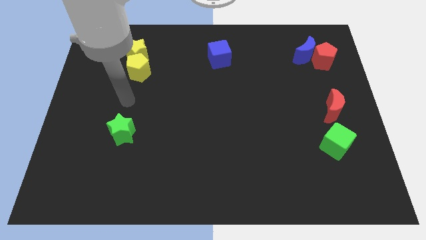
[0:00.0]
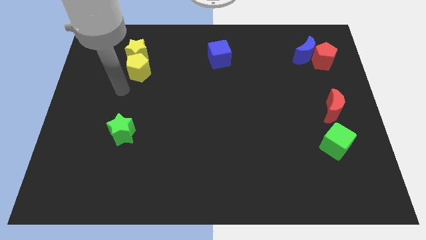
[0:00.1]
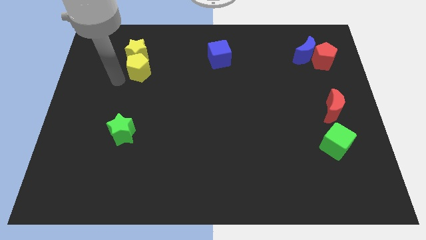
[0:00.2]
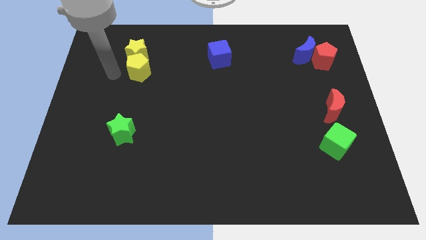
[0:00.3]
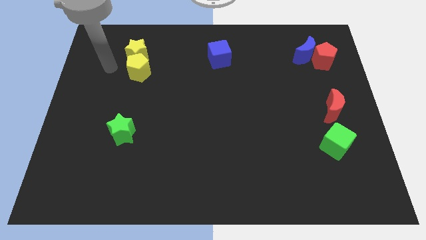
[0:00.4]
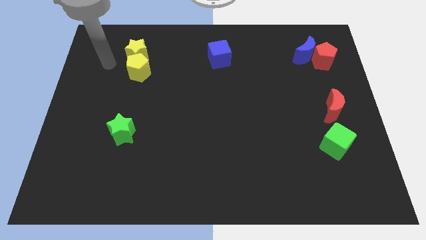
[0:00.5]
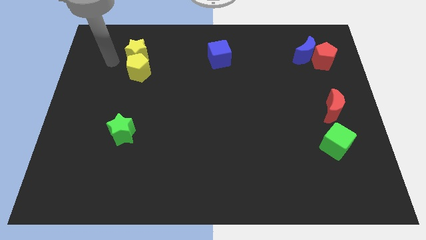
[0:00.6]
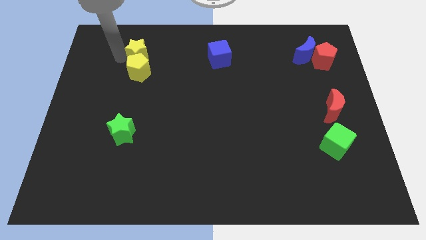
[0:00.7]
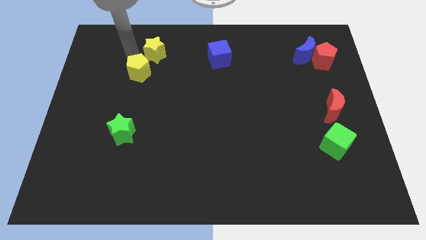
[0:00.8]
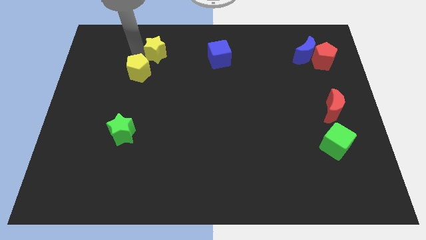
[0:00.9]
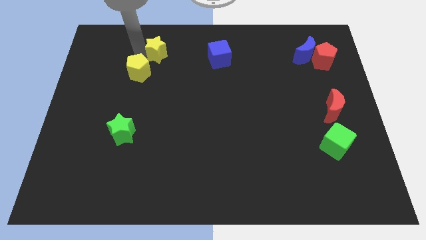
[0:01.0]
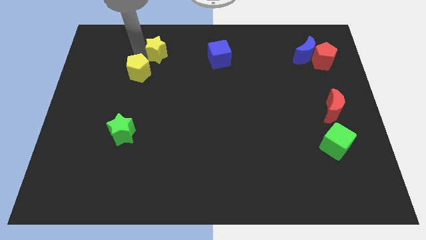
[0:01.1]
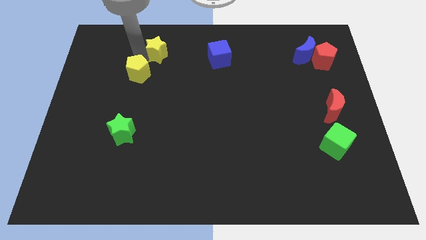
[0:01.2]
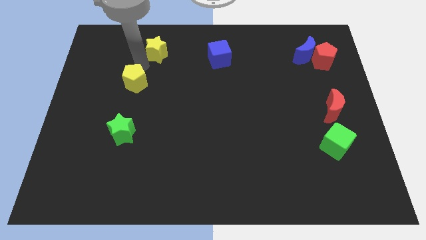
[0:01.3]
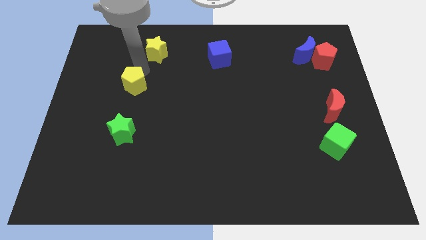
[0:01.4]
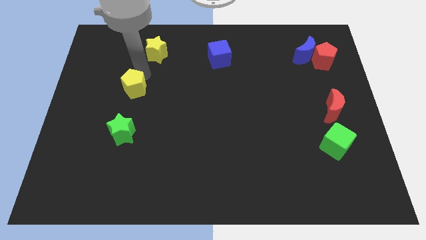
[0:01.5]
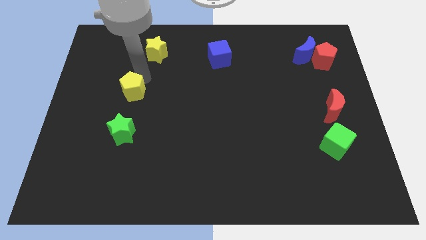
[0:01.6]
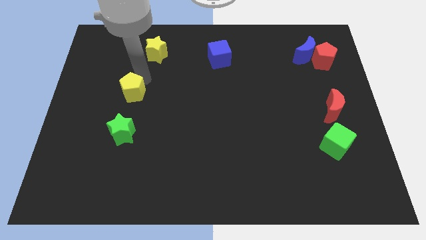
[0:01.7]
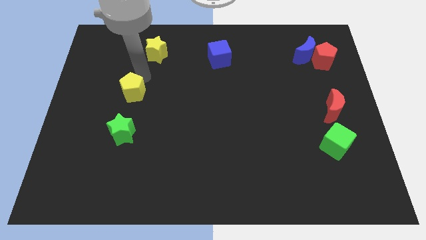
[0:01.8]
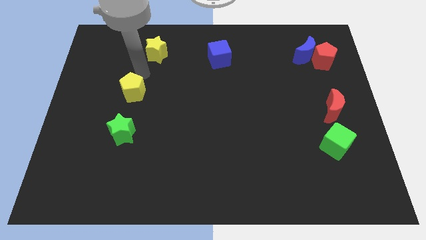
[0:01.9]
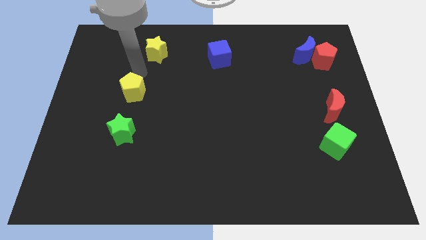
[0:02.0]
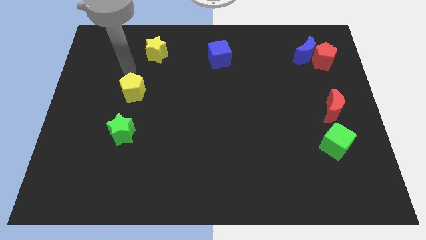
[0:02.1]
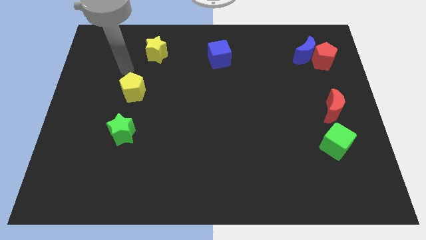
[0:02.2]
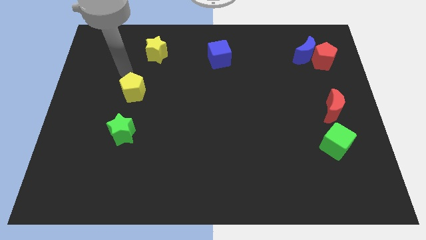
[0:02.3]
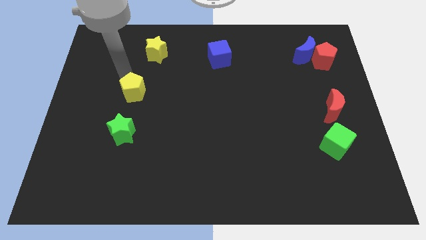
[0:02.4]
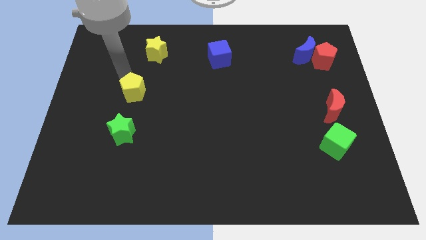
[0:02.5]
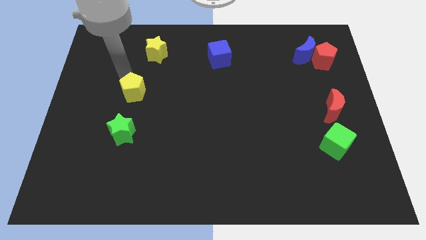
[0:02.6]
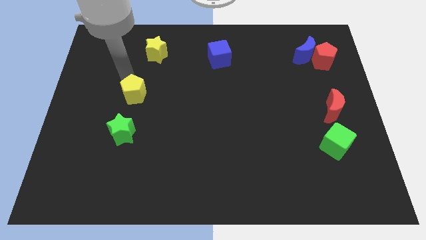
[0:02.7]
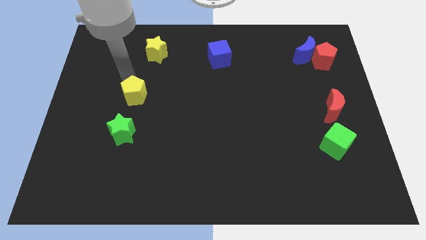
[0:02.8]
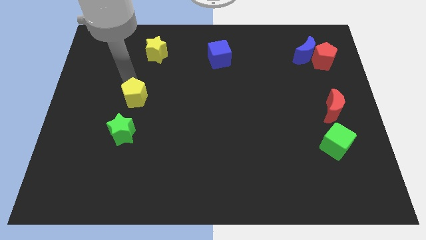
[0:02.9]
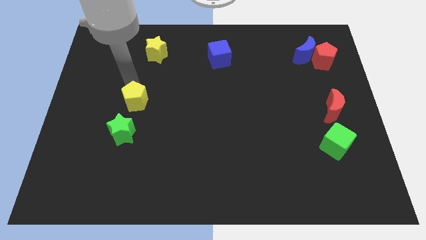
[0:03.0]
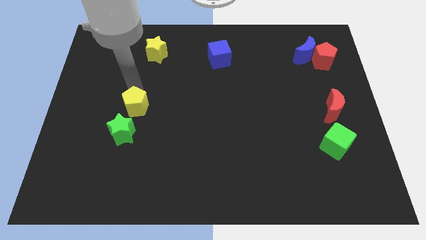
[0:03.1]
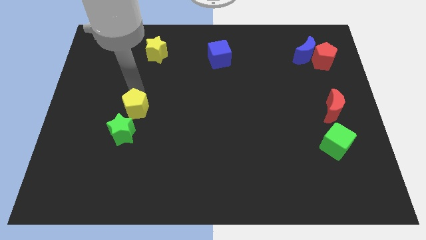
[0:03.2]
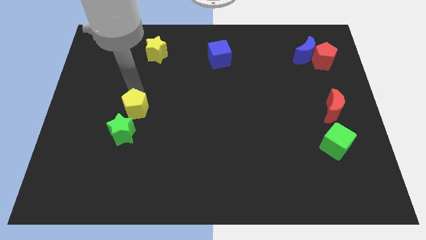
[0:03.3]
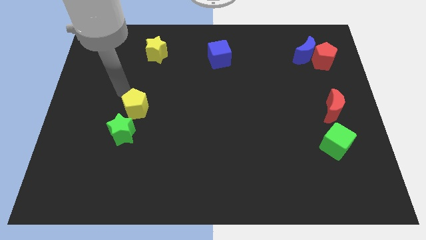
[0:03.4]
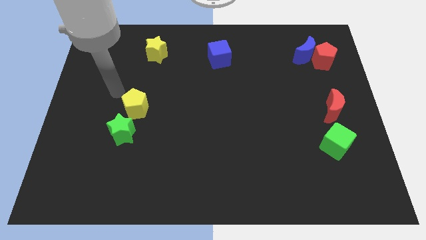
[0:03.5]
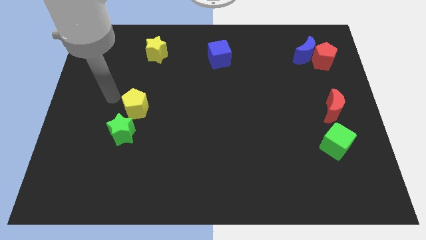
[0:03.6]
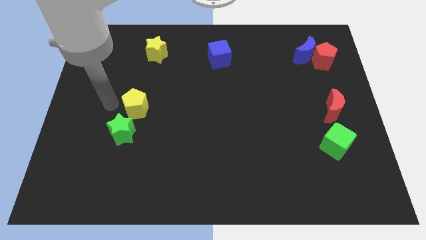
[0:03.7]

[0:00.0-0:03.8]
place the yellow pentagon above the green star

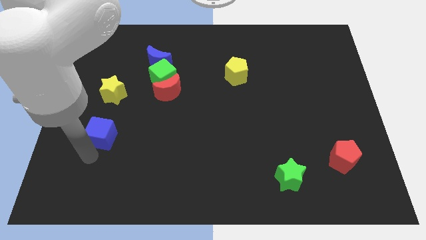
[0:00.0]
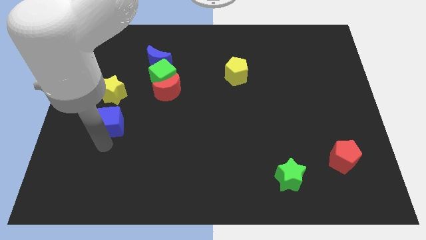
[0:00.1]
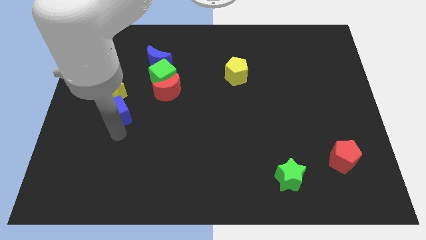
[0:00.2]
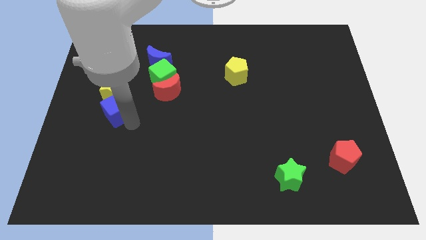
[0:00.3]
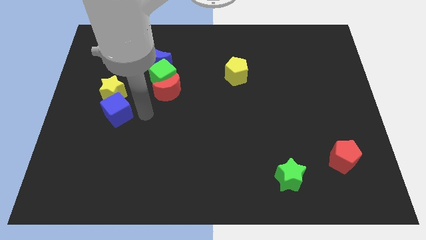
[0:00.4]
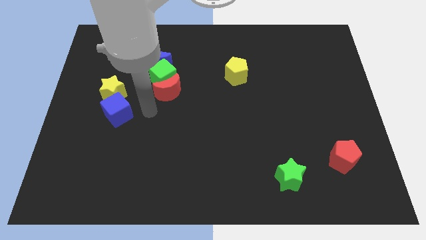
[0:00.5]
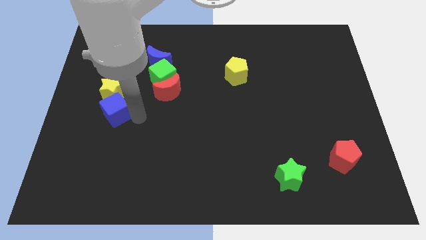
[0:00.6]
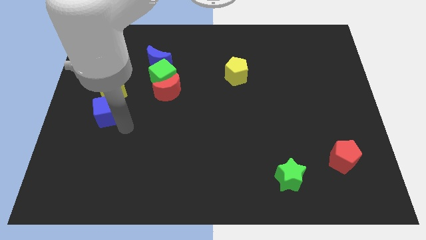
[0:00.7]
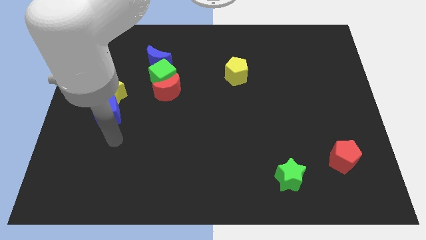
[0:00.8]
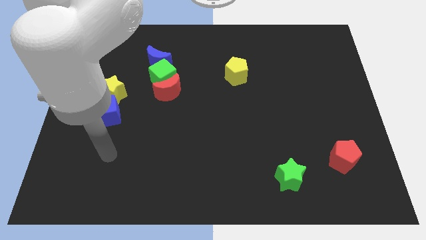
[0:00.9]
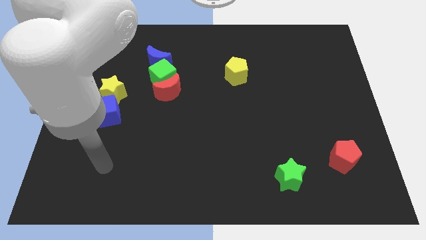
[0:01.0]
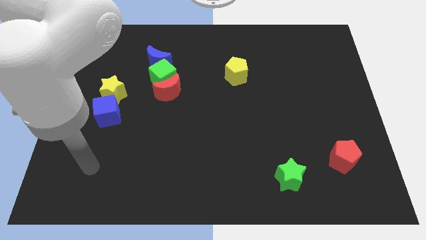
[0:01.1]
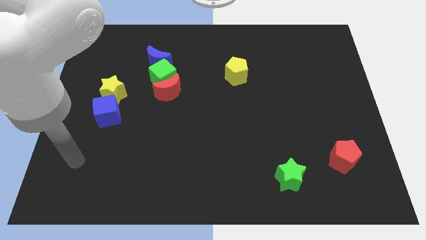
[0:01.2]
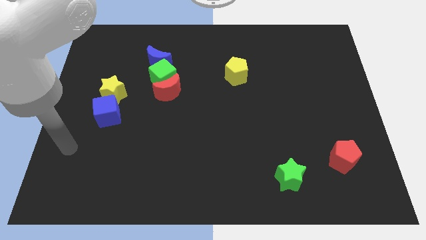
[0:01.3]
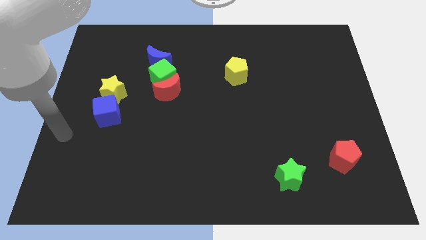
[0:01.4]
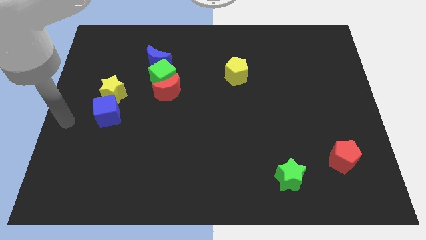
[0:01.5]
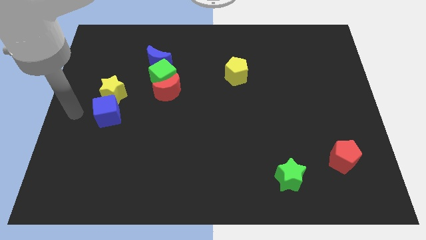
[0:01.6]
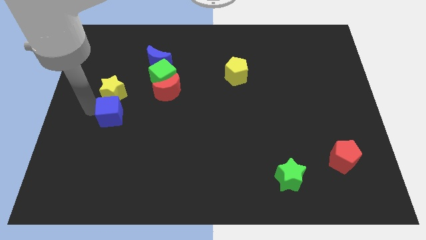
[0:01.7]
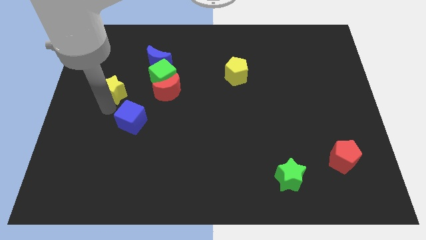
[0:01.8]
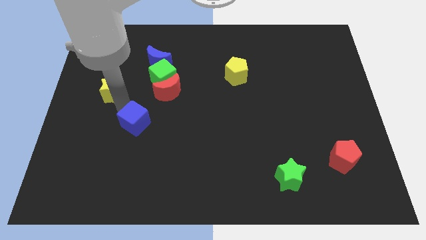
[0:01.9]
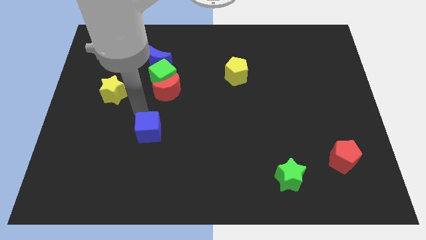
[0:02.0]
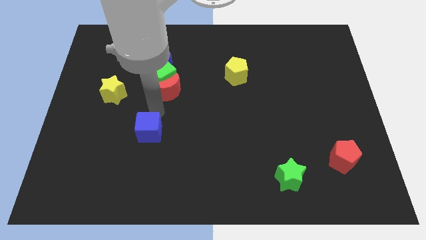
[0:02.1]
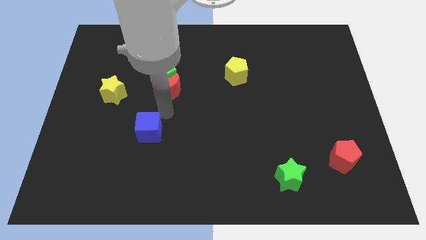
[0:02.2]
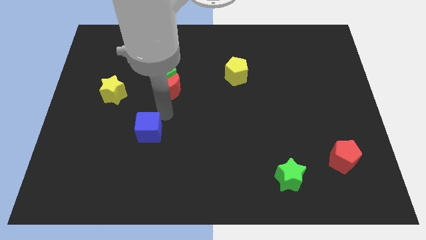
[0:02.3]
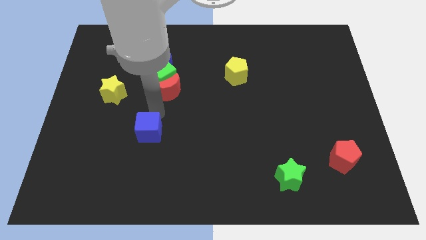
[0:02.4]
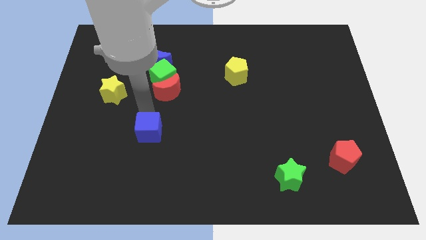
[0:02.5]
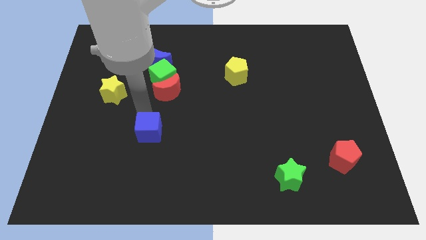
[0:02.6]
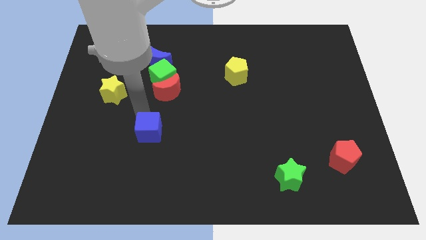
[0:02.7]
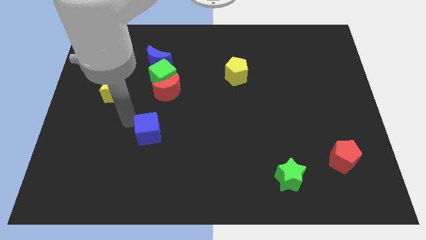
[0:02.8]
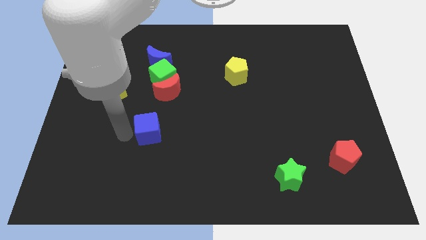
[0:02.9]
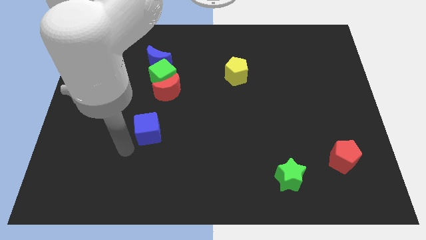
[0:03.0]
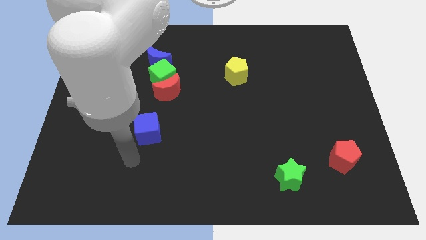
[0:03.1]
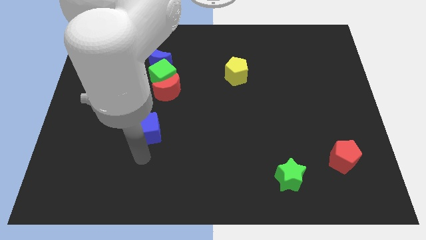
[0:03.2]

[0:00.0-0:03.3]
move blue cube away from yellow star

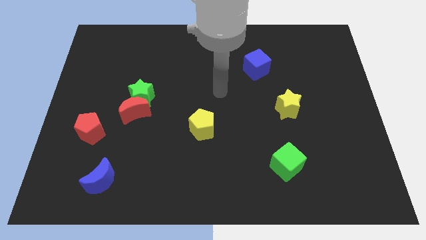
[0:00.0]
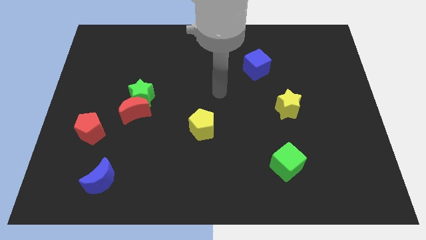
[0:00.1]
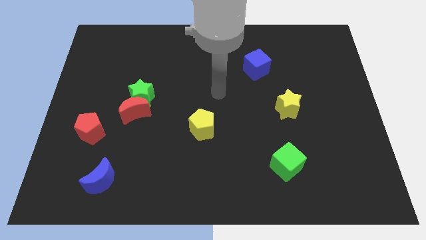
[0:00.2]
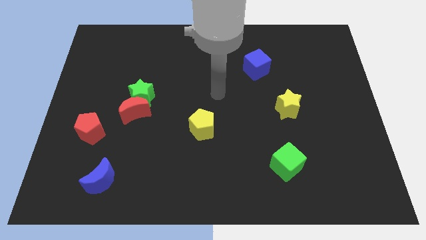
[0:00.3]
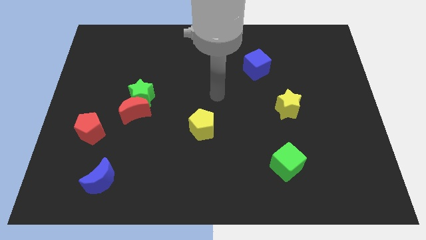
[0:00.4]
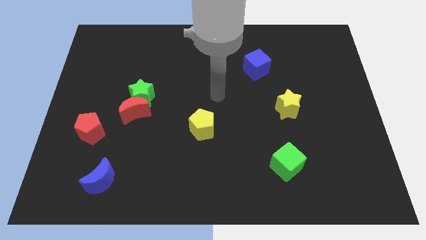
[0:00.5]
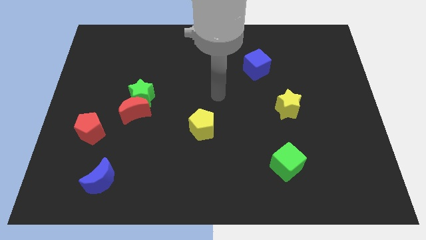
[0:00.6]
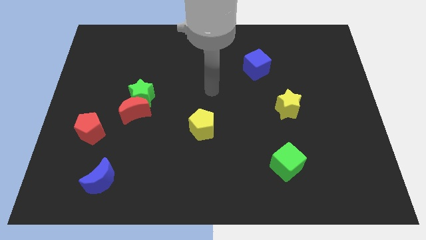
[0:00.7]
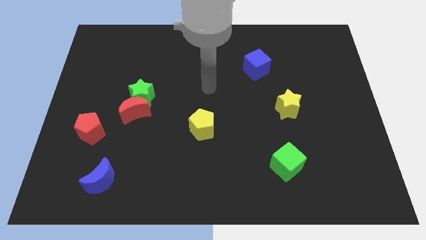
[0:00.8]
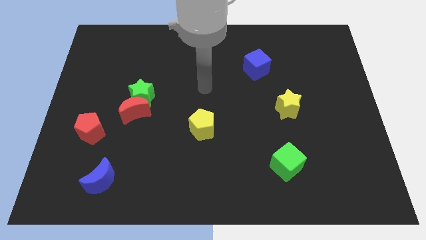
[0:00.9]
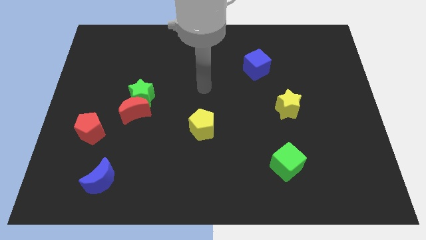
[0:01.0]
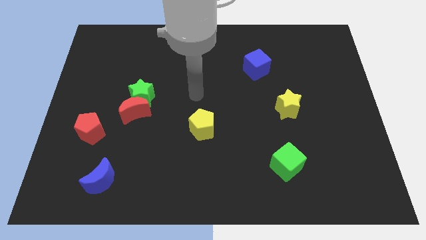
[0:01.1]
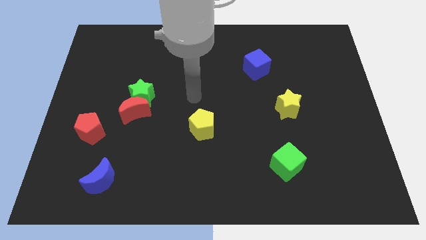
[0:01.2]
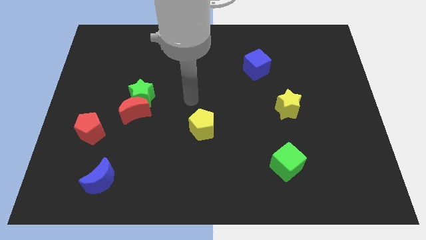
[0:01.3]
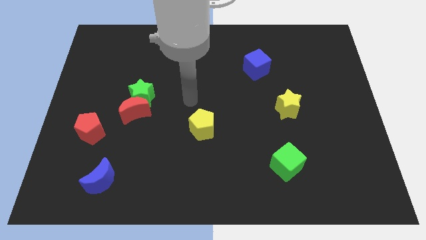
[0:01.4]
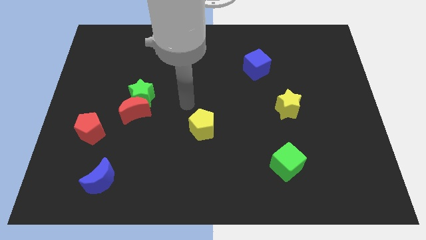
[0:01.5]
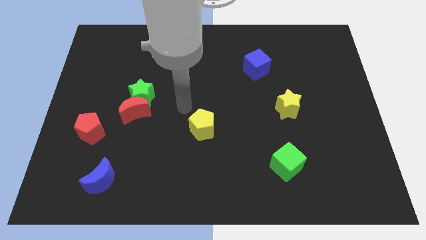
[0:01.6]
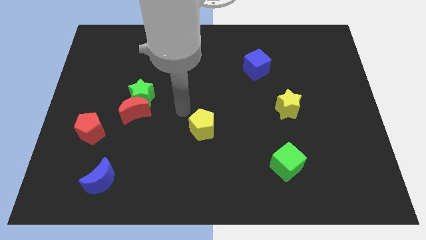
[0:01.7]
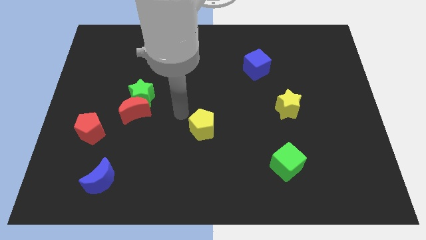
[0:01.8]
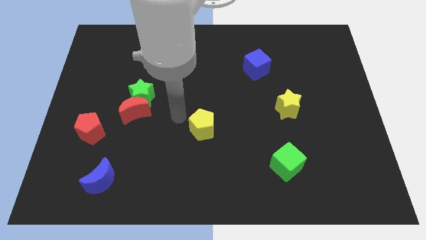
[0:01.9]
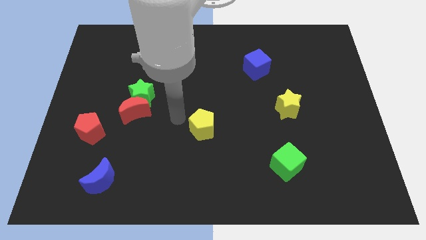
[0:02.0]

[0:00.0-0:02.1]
point your arm to the left side of the yellow pentagon
